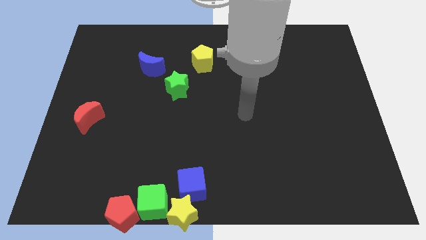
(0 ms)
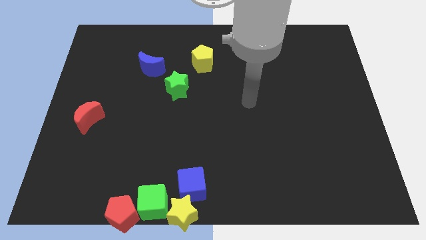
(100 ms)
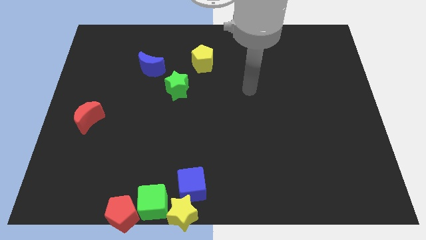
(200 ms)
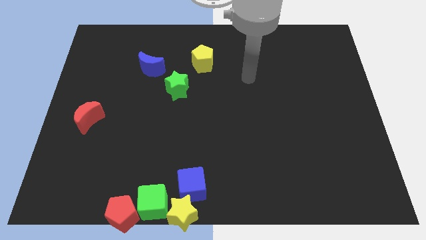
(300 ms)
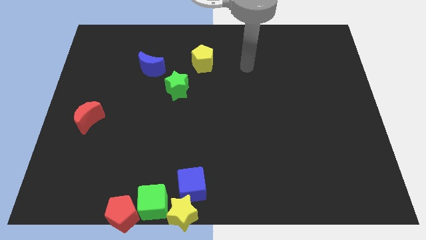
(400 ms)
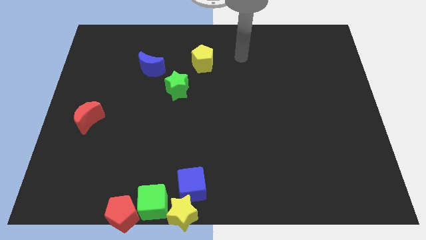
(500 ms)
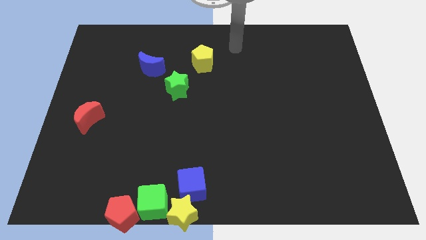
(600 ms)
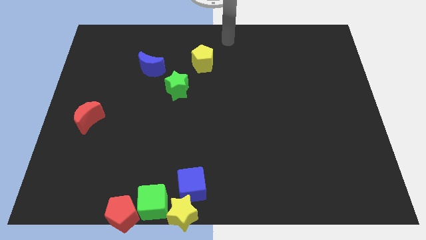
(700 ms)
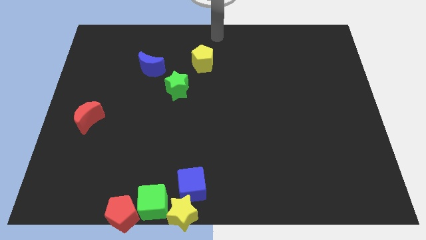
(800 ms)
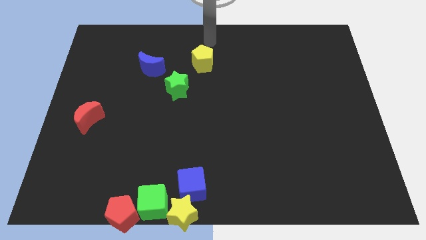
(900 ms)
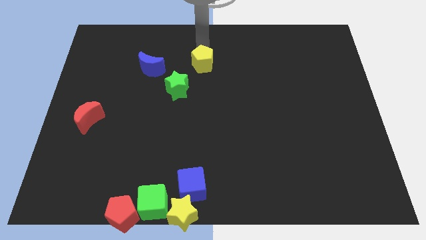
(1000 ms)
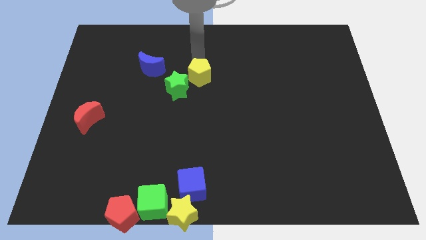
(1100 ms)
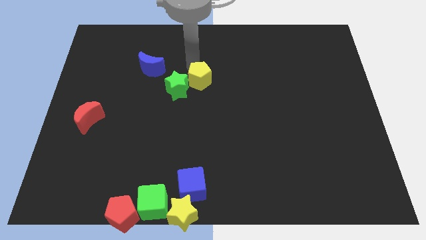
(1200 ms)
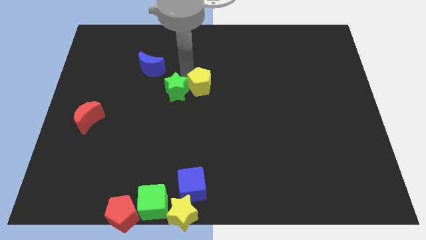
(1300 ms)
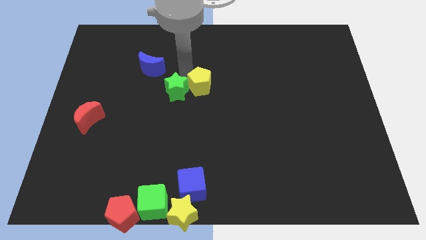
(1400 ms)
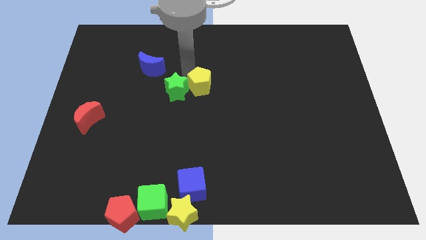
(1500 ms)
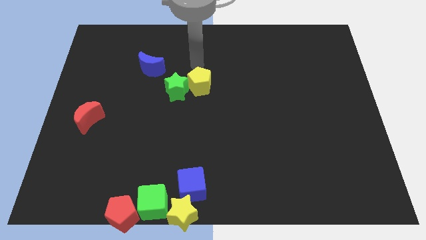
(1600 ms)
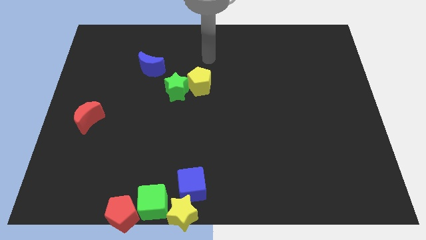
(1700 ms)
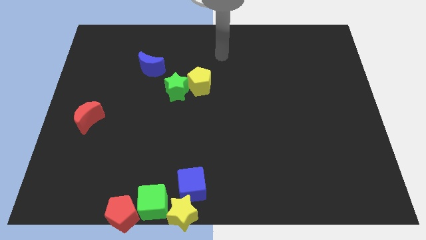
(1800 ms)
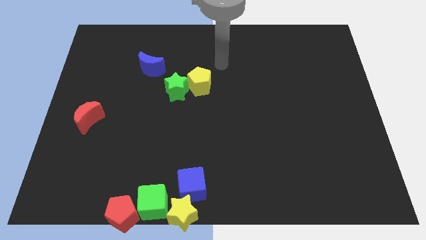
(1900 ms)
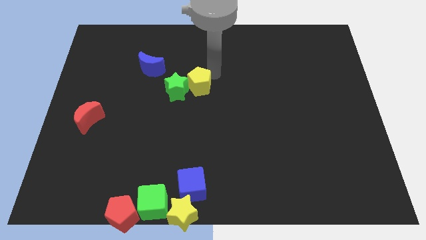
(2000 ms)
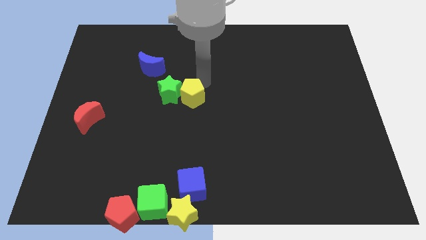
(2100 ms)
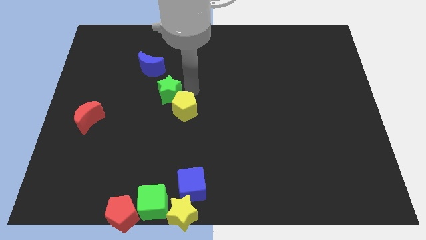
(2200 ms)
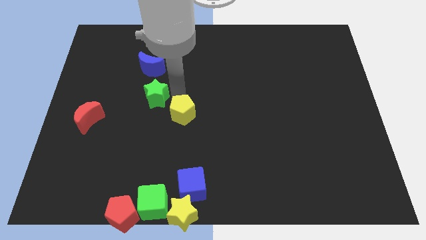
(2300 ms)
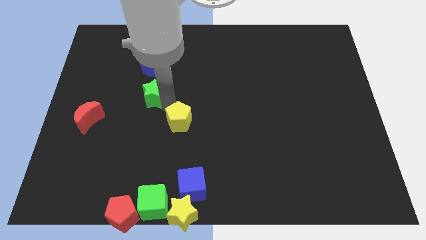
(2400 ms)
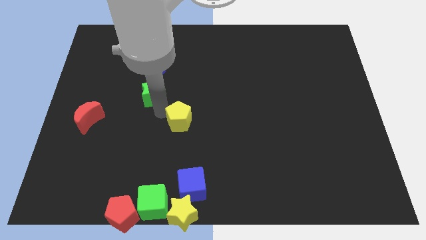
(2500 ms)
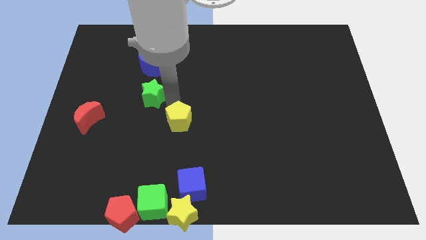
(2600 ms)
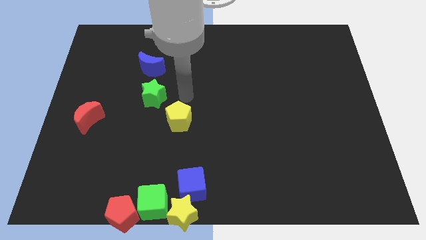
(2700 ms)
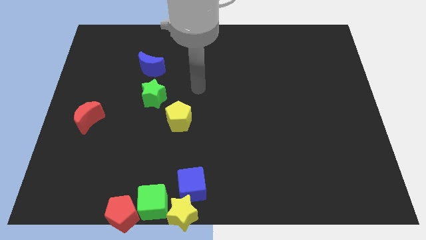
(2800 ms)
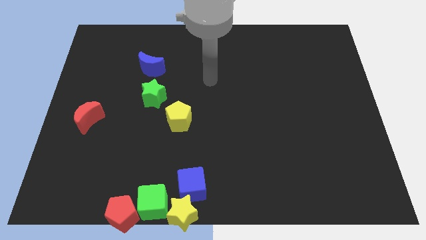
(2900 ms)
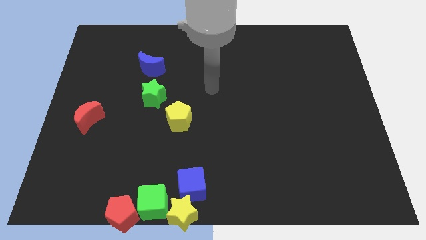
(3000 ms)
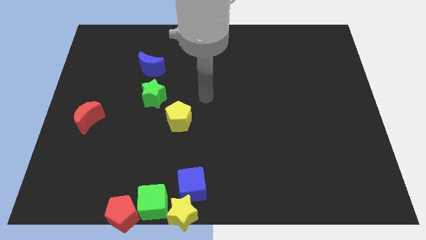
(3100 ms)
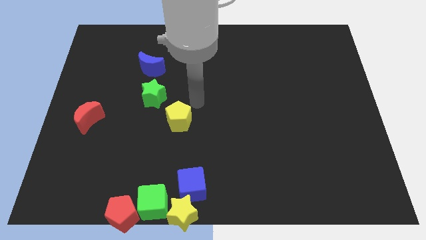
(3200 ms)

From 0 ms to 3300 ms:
slide the yellow pentagon to the bottom right side of the green star

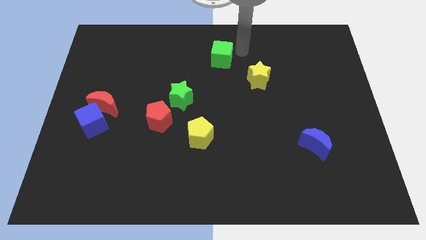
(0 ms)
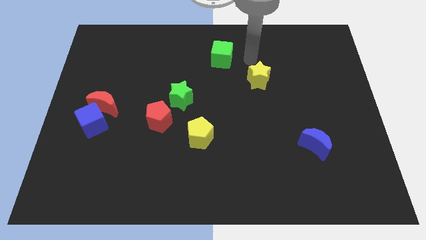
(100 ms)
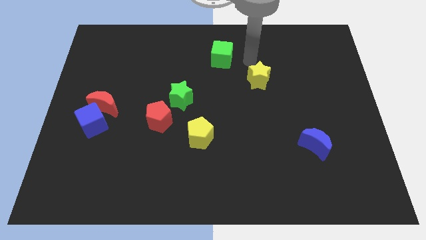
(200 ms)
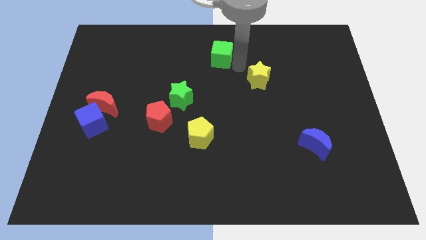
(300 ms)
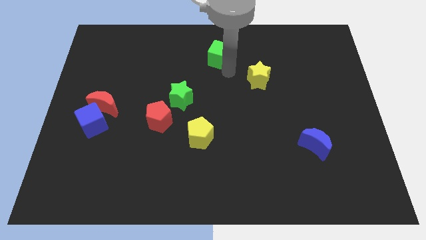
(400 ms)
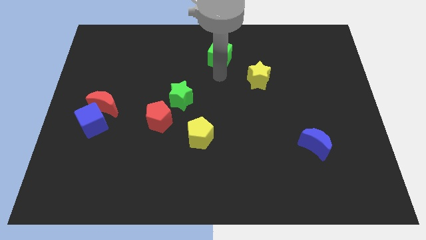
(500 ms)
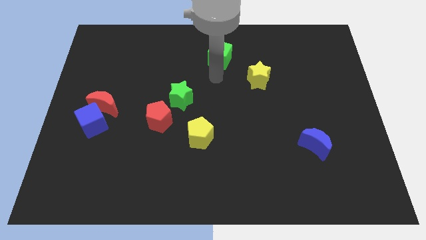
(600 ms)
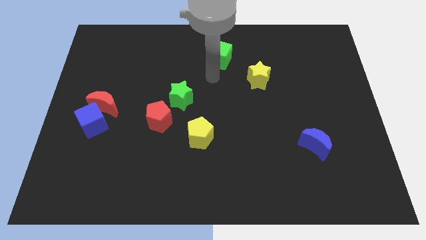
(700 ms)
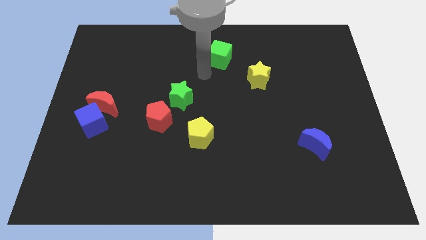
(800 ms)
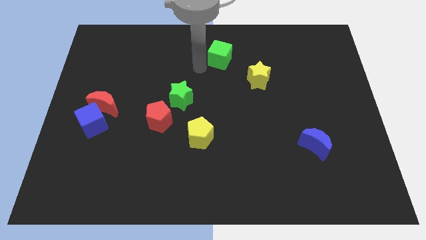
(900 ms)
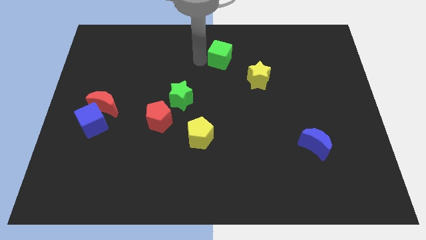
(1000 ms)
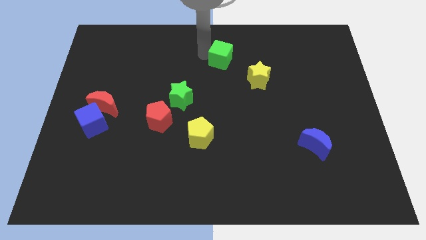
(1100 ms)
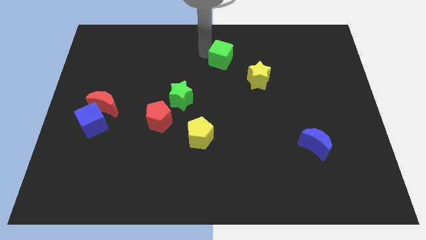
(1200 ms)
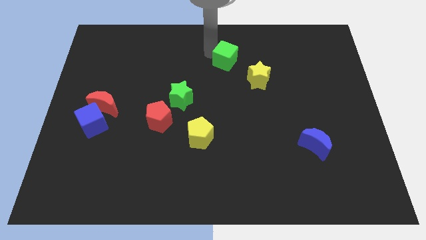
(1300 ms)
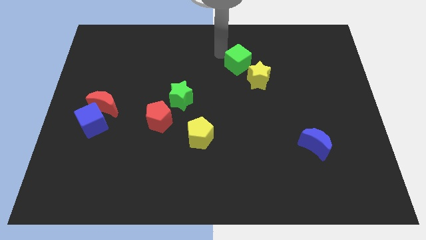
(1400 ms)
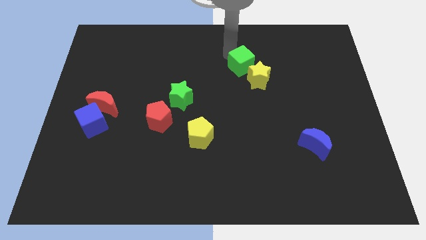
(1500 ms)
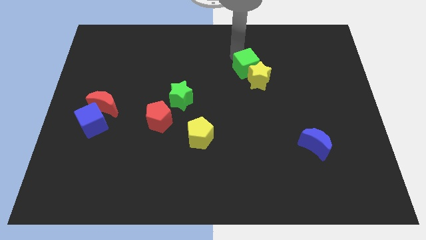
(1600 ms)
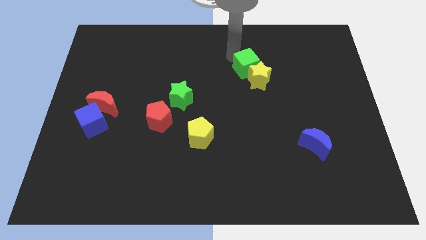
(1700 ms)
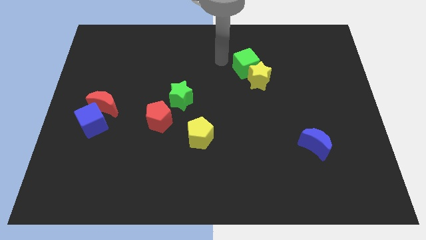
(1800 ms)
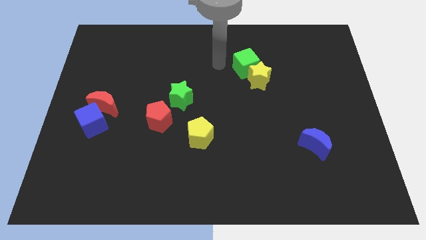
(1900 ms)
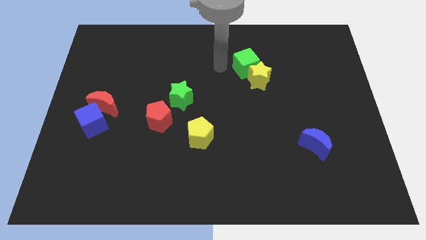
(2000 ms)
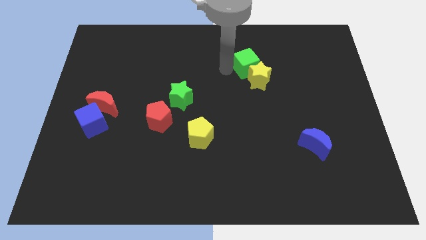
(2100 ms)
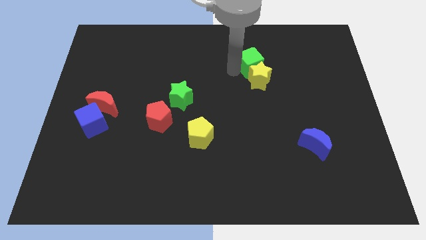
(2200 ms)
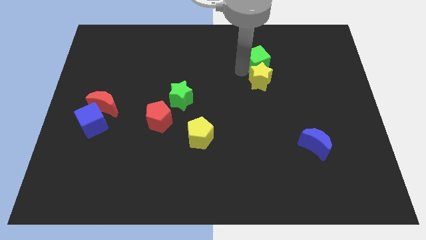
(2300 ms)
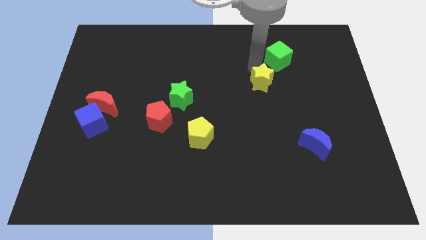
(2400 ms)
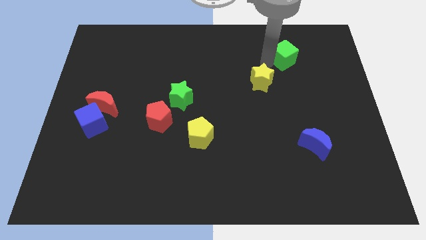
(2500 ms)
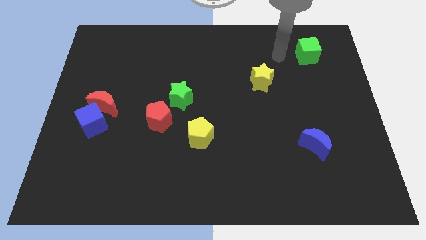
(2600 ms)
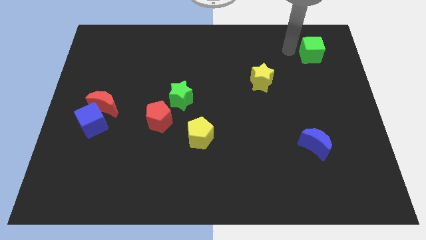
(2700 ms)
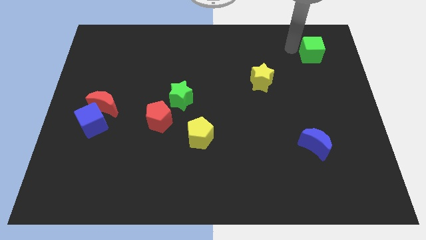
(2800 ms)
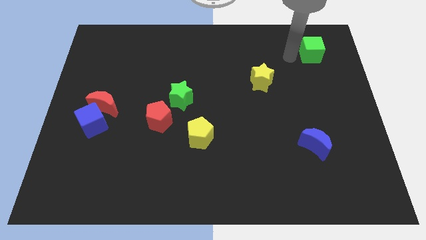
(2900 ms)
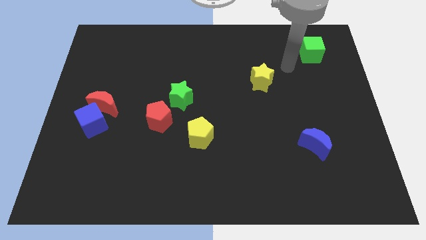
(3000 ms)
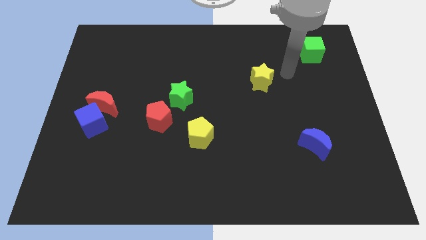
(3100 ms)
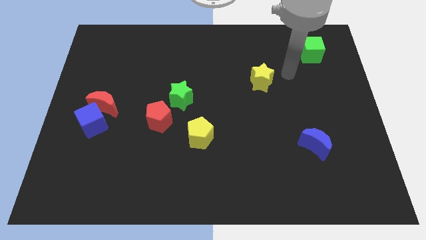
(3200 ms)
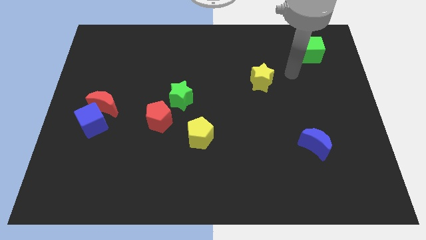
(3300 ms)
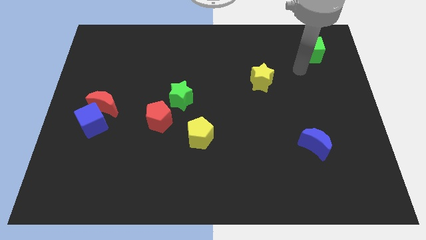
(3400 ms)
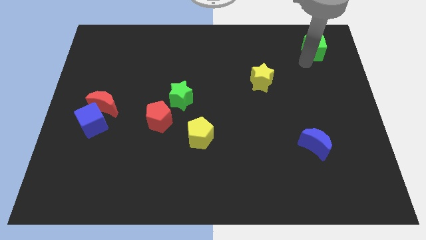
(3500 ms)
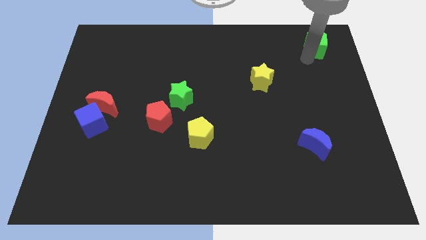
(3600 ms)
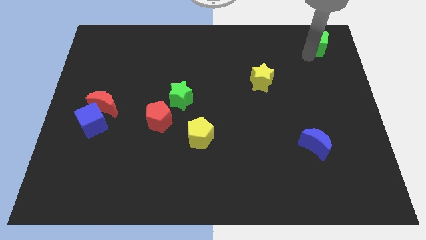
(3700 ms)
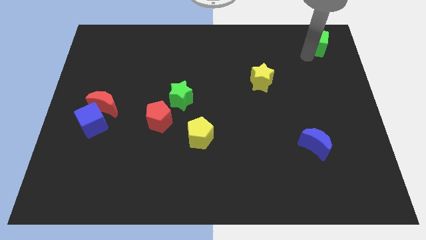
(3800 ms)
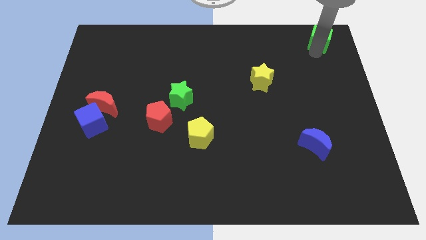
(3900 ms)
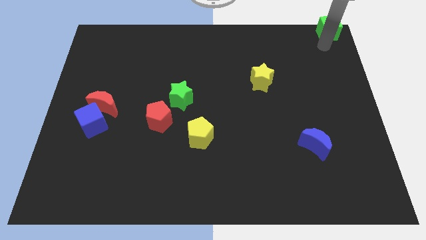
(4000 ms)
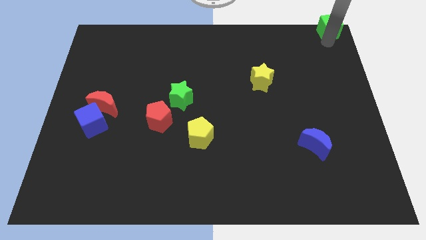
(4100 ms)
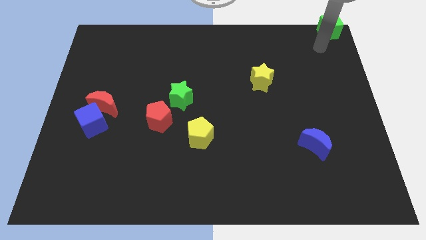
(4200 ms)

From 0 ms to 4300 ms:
slide the green cube to the top right of the board

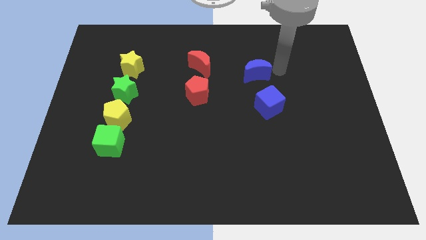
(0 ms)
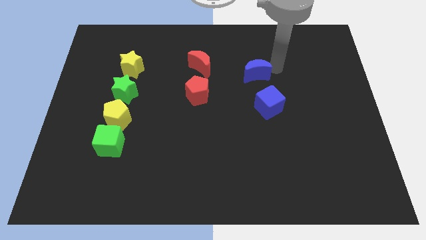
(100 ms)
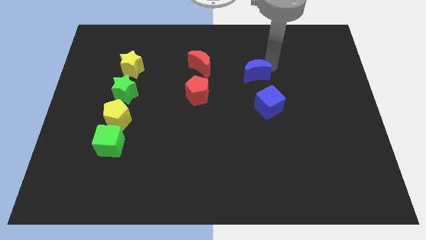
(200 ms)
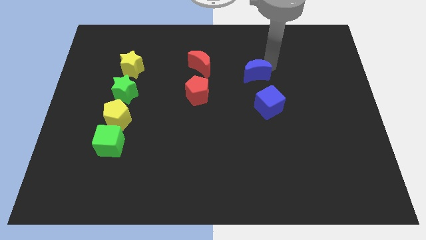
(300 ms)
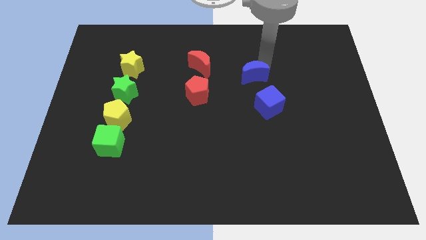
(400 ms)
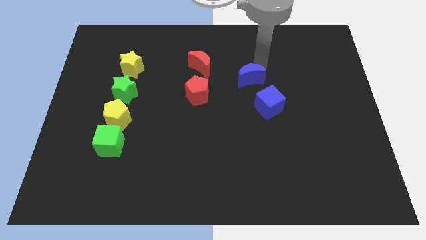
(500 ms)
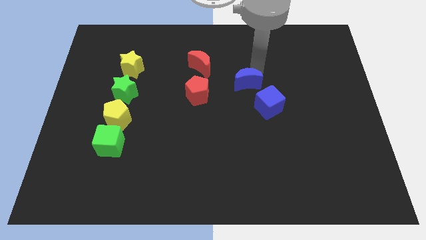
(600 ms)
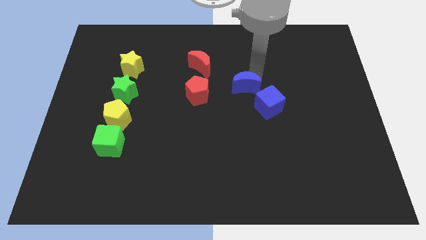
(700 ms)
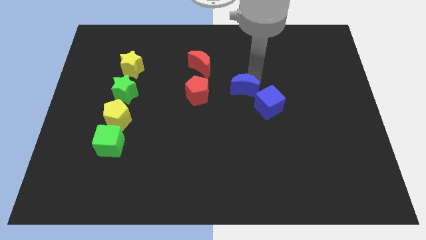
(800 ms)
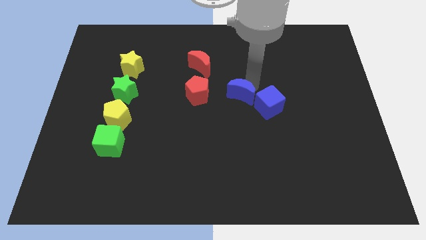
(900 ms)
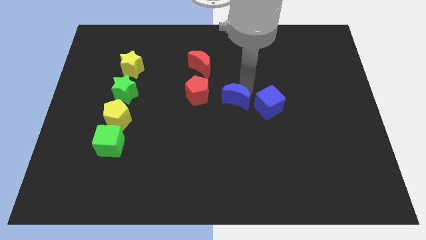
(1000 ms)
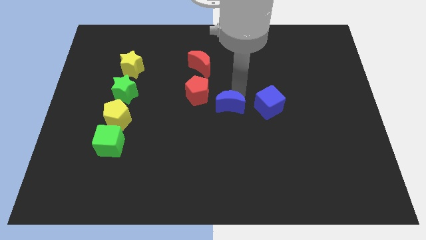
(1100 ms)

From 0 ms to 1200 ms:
push the blue crescent to the left of the blue cube

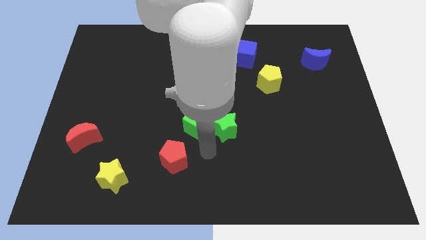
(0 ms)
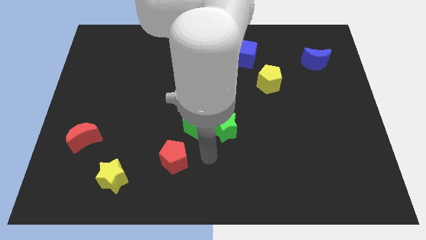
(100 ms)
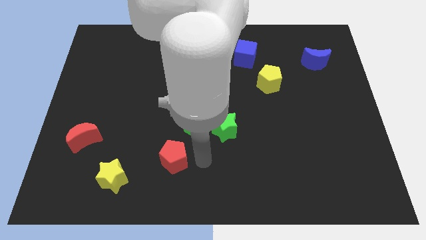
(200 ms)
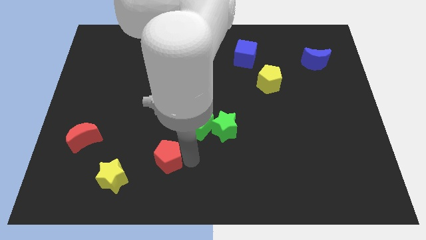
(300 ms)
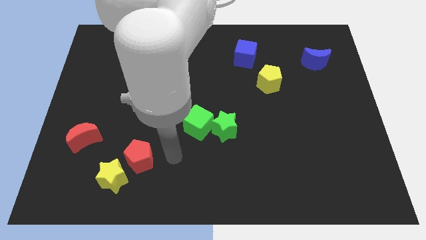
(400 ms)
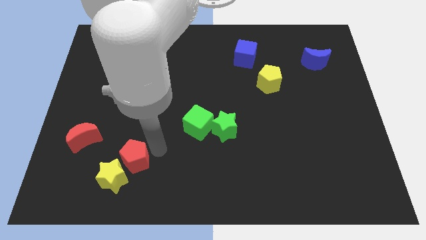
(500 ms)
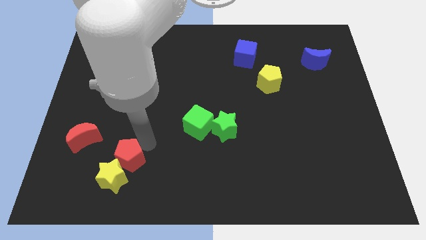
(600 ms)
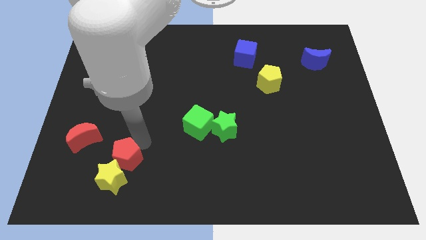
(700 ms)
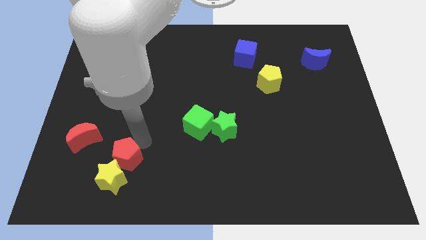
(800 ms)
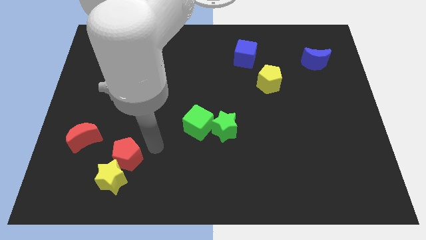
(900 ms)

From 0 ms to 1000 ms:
push the red pentagon into yellow star
